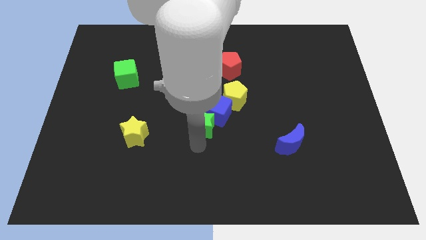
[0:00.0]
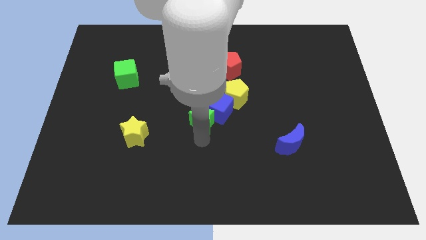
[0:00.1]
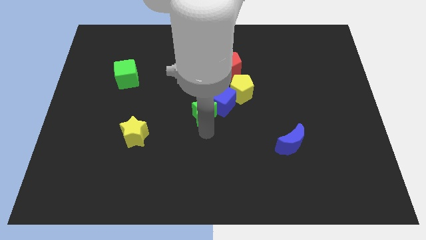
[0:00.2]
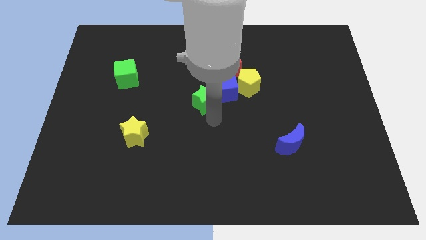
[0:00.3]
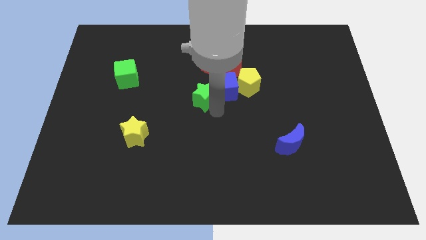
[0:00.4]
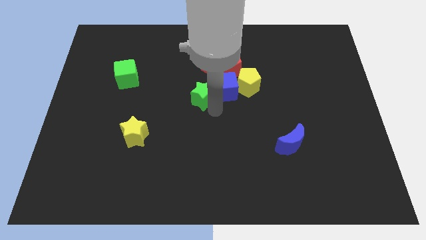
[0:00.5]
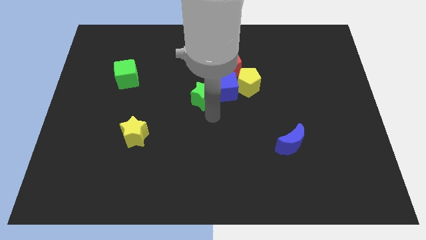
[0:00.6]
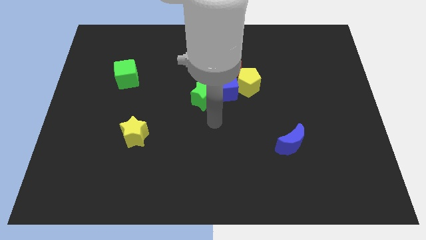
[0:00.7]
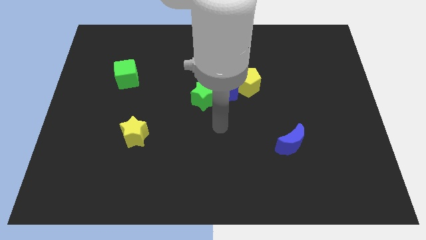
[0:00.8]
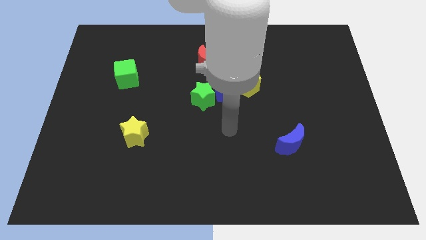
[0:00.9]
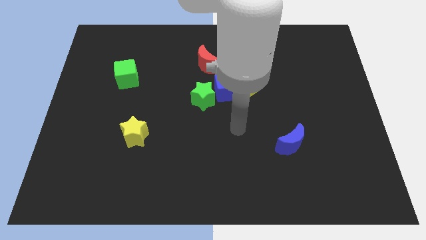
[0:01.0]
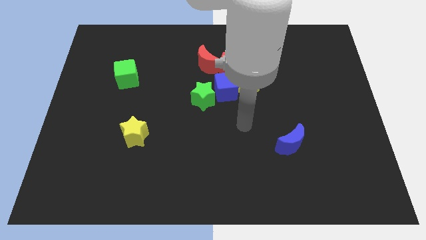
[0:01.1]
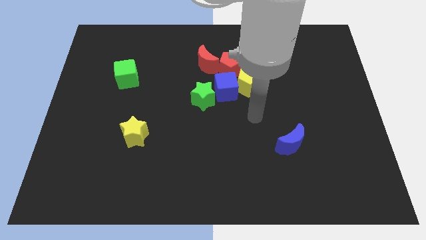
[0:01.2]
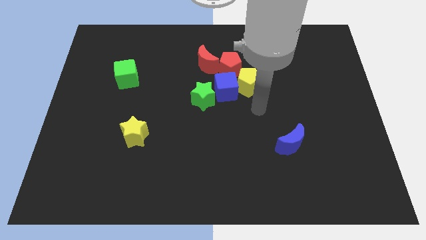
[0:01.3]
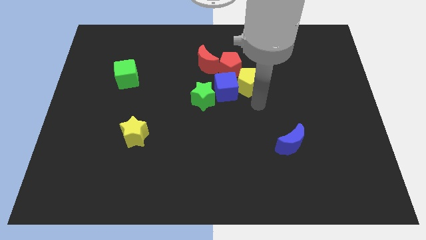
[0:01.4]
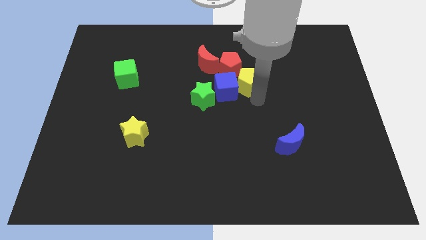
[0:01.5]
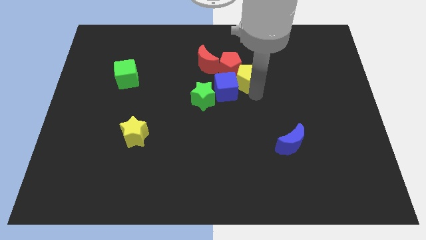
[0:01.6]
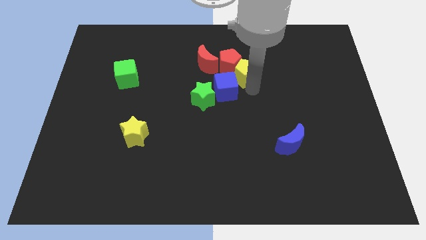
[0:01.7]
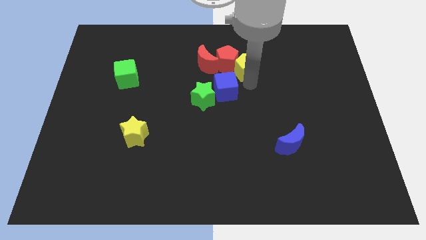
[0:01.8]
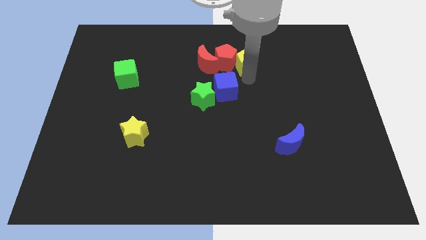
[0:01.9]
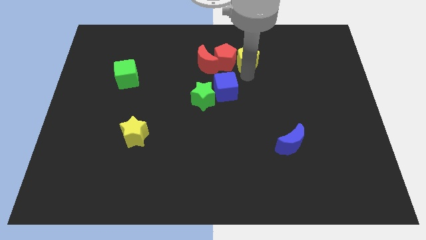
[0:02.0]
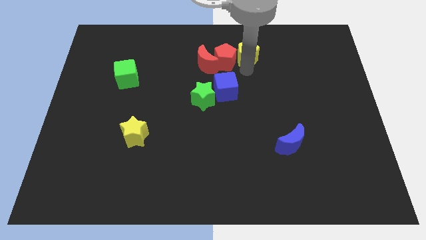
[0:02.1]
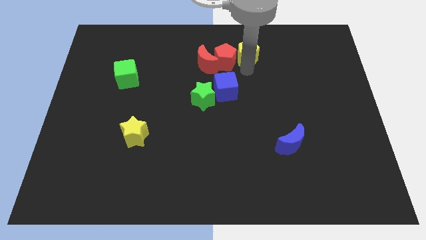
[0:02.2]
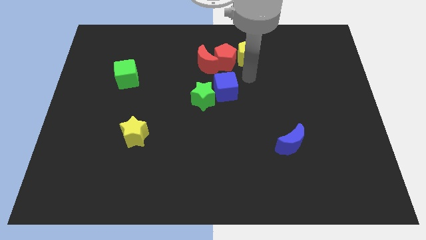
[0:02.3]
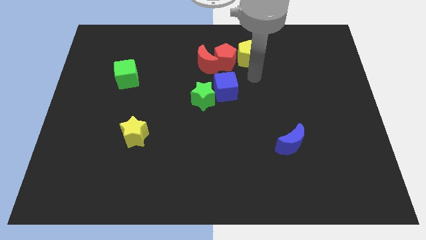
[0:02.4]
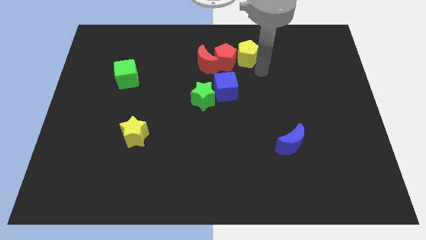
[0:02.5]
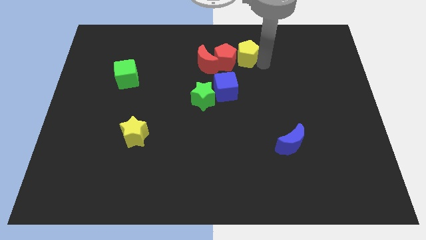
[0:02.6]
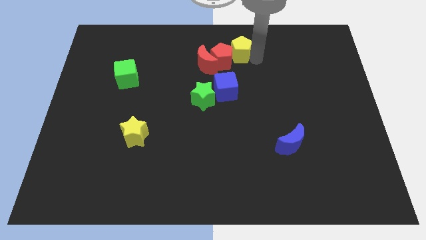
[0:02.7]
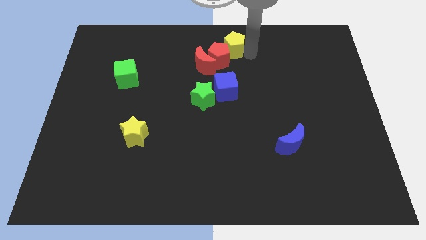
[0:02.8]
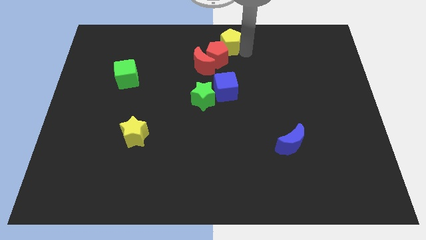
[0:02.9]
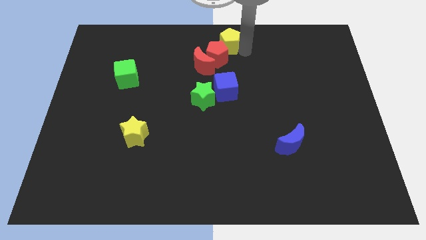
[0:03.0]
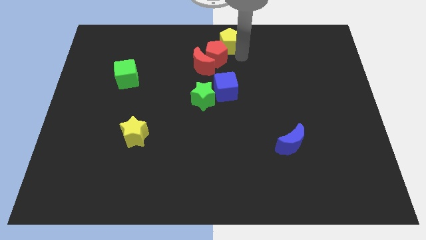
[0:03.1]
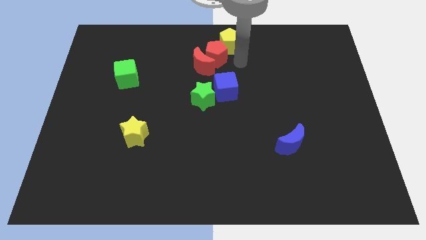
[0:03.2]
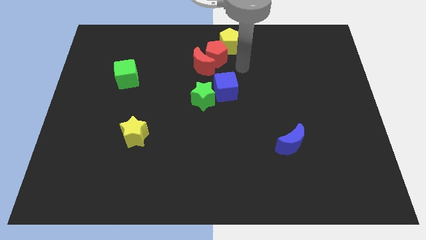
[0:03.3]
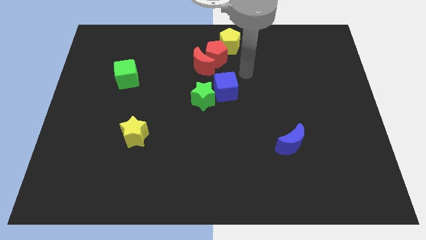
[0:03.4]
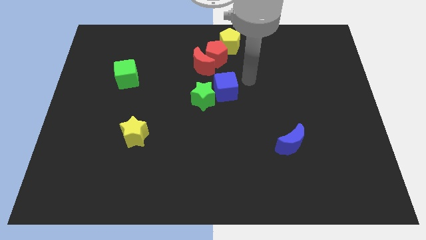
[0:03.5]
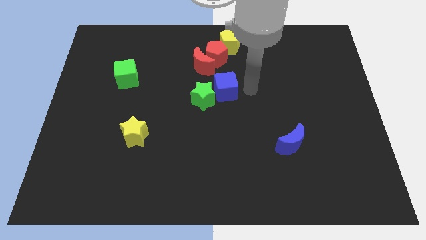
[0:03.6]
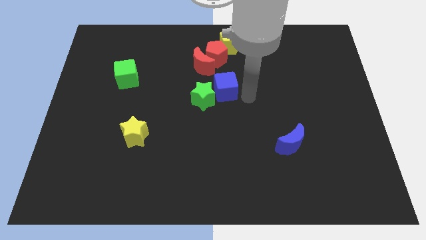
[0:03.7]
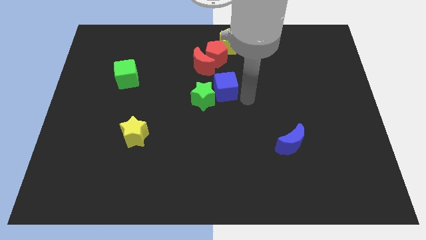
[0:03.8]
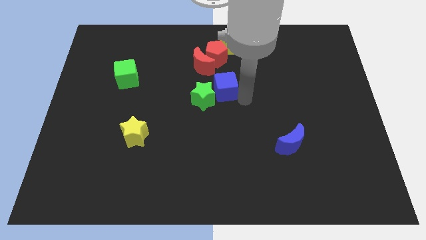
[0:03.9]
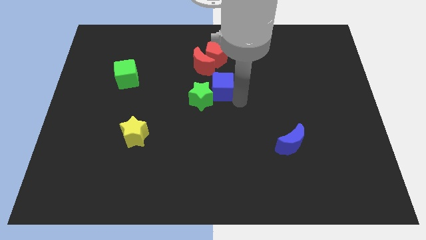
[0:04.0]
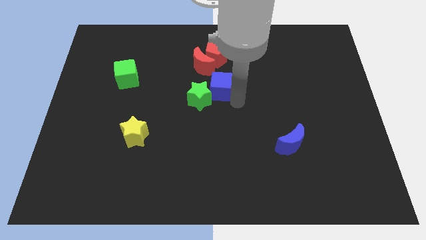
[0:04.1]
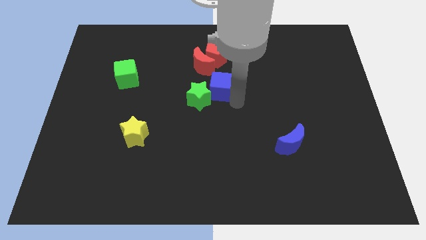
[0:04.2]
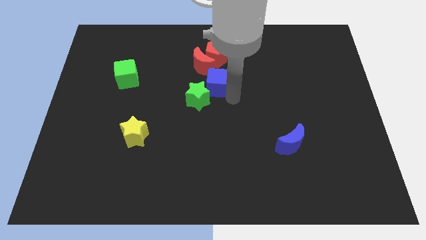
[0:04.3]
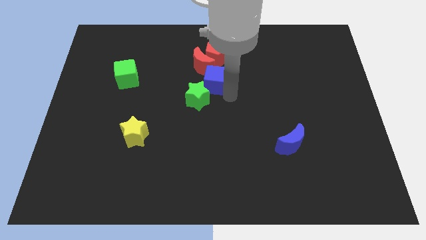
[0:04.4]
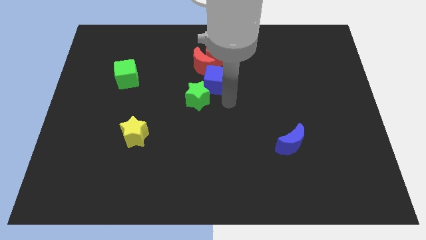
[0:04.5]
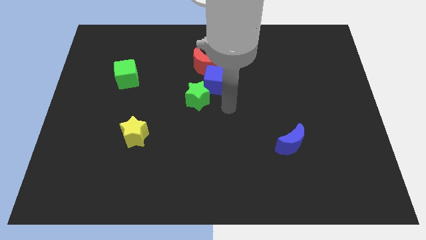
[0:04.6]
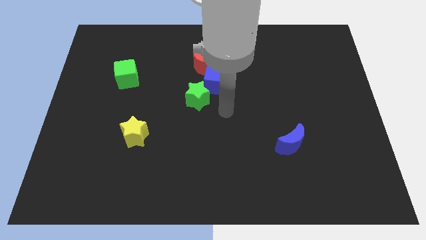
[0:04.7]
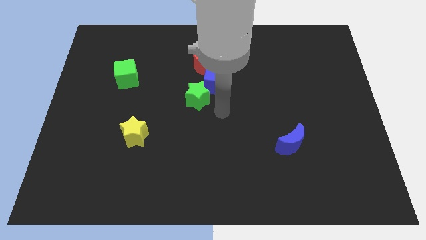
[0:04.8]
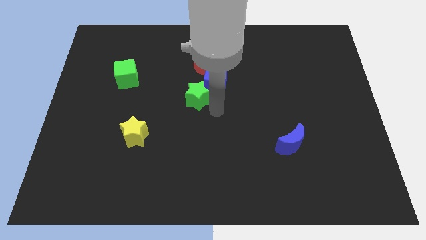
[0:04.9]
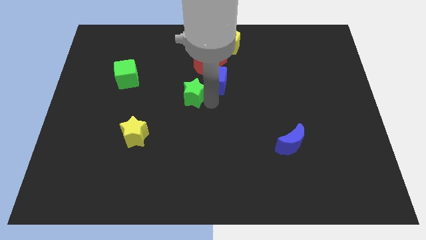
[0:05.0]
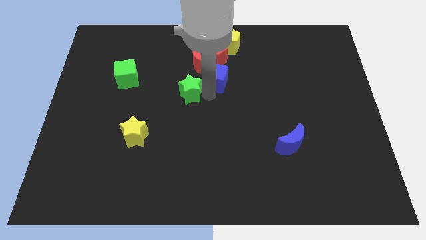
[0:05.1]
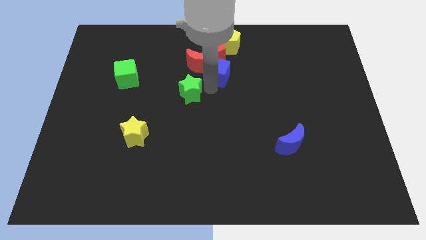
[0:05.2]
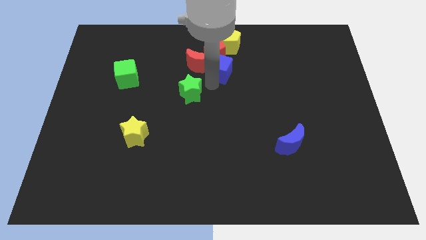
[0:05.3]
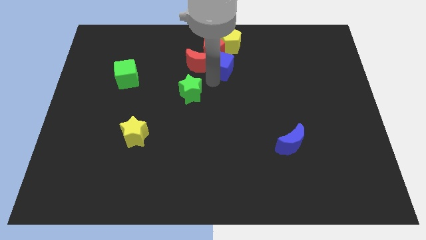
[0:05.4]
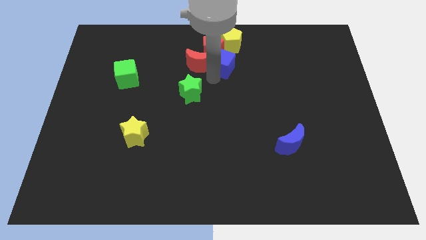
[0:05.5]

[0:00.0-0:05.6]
move the green star between the blue moon and green cube

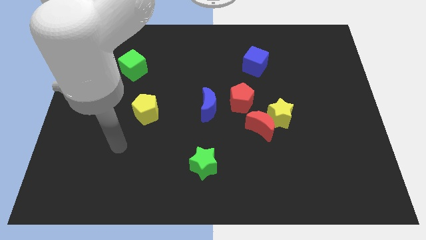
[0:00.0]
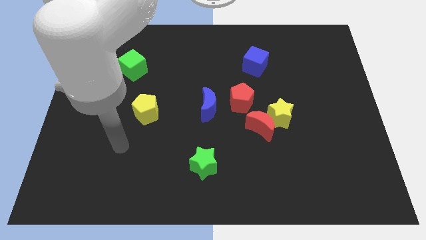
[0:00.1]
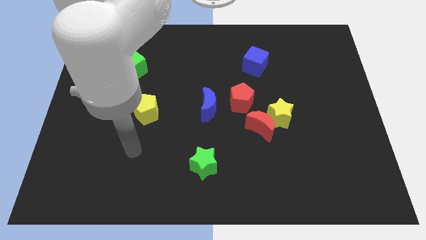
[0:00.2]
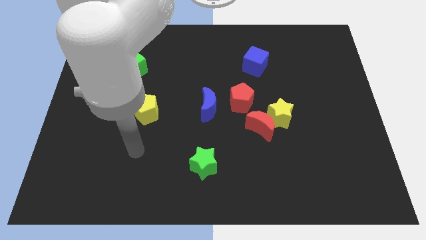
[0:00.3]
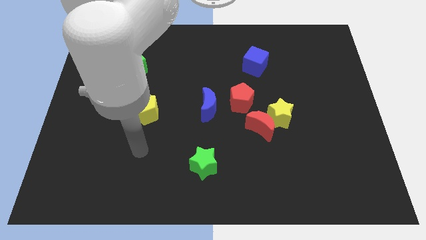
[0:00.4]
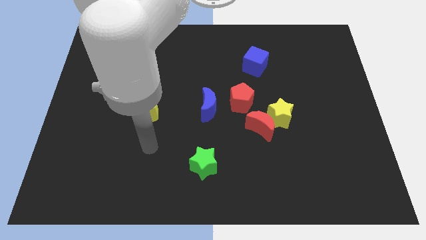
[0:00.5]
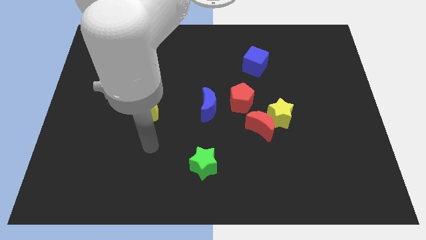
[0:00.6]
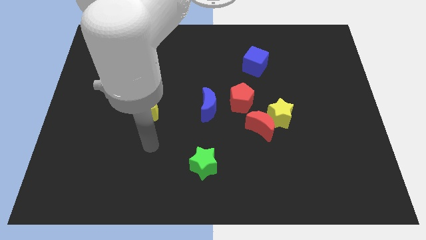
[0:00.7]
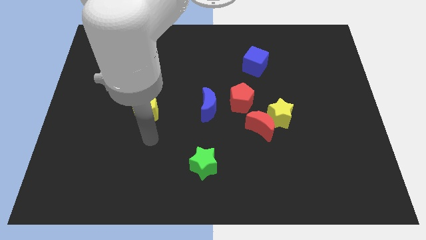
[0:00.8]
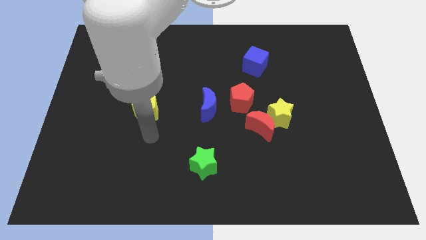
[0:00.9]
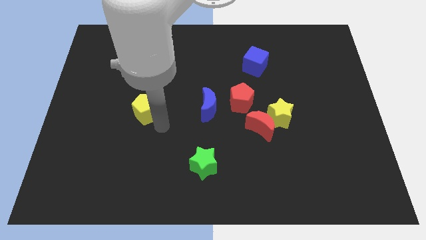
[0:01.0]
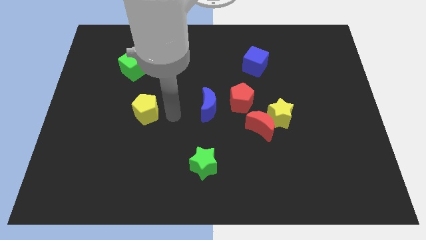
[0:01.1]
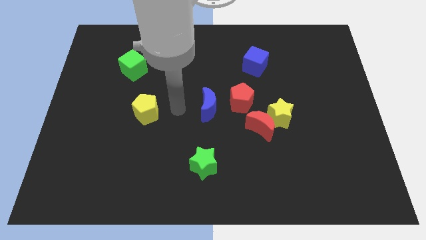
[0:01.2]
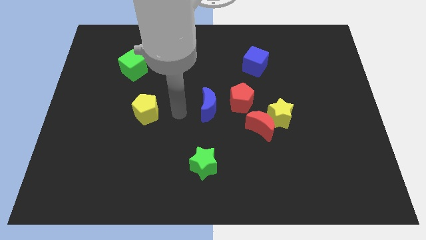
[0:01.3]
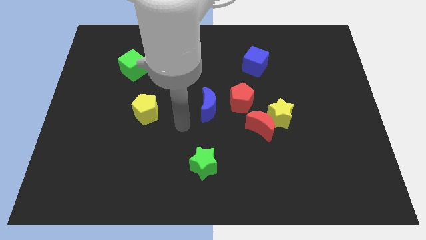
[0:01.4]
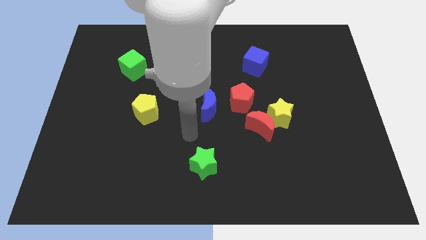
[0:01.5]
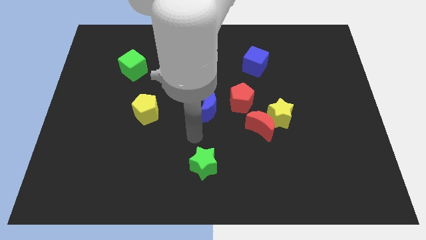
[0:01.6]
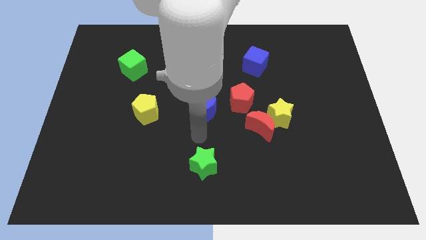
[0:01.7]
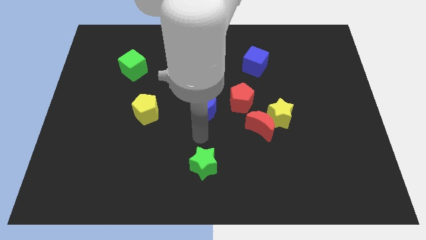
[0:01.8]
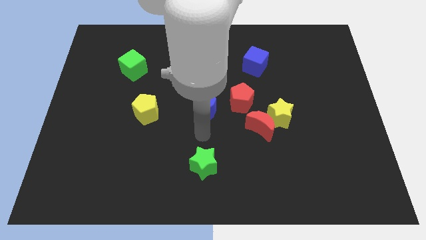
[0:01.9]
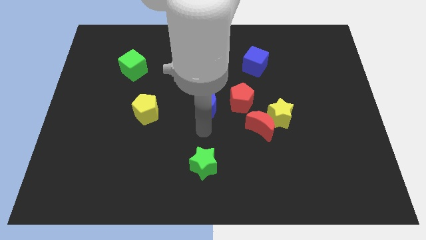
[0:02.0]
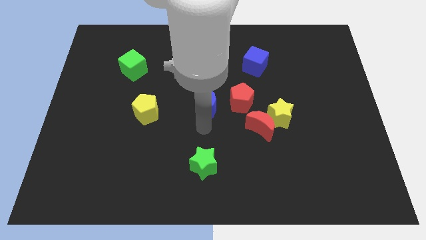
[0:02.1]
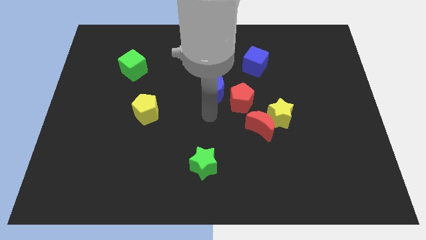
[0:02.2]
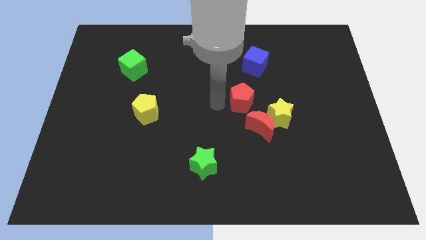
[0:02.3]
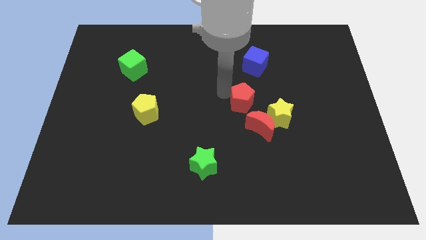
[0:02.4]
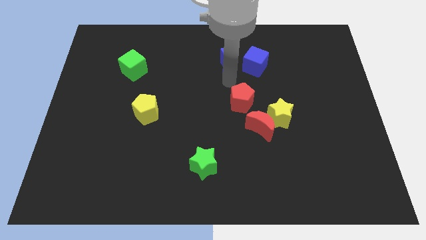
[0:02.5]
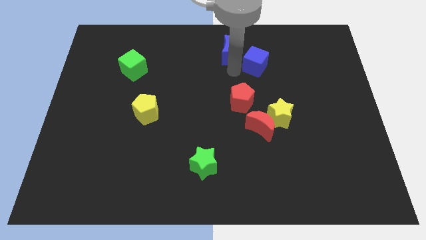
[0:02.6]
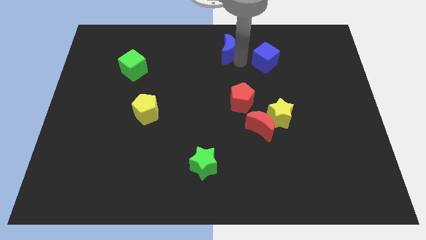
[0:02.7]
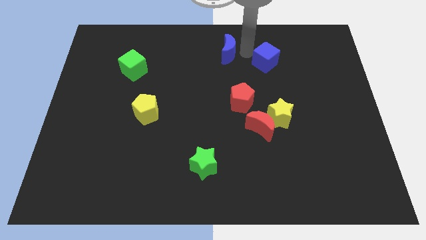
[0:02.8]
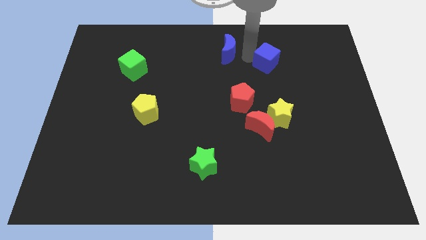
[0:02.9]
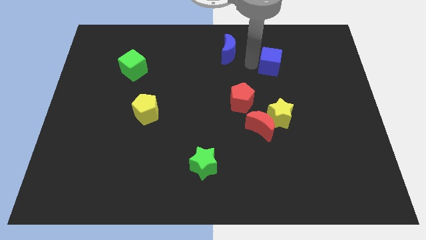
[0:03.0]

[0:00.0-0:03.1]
move the blue crescent to the top center

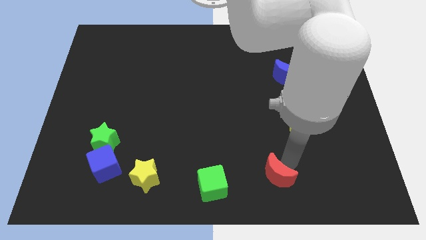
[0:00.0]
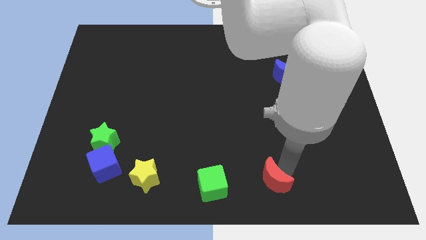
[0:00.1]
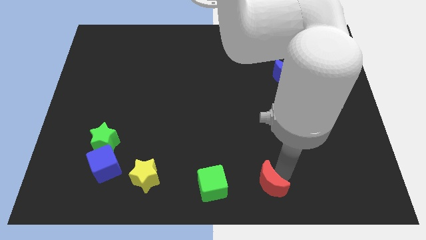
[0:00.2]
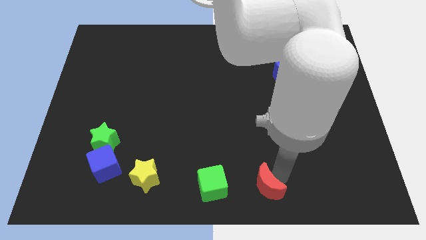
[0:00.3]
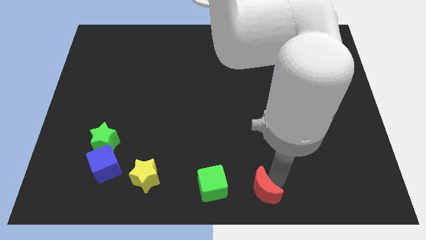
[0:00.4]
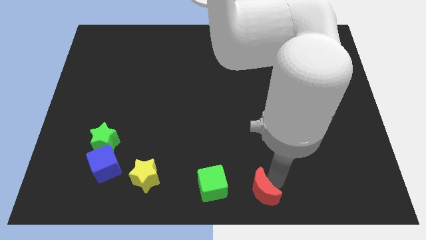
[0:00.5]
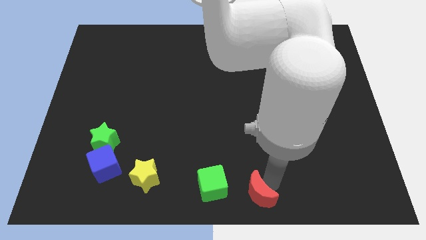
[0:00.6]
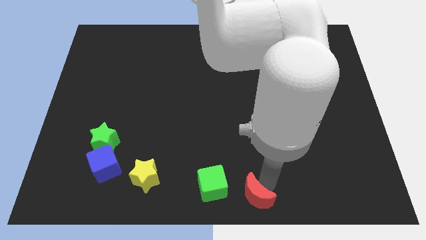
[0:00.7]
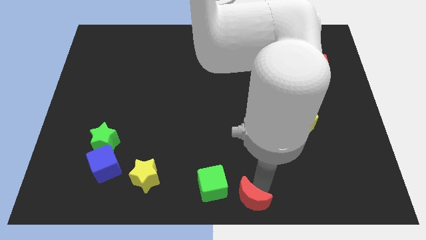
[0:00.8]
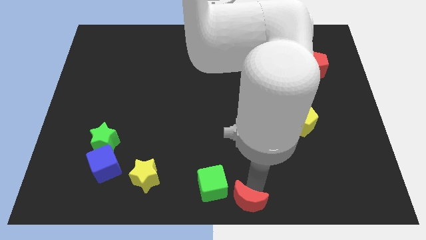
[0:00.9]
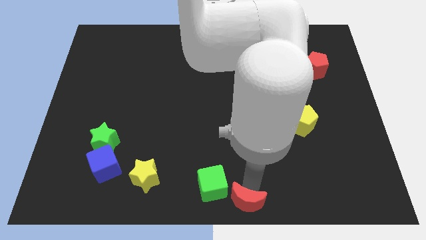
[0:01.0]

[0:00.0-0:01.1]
push the red moon towards the right side of the green cube
